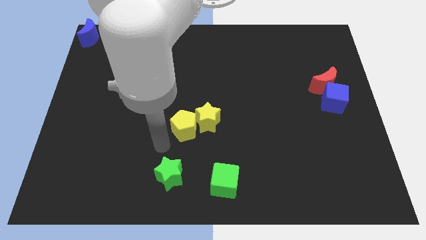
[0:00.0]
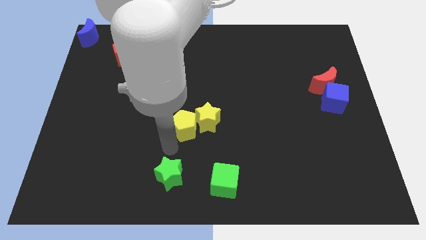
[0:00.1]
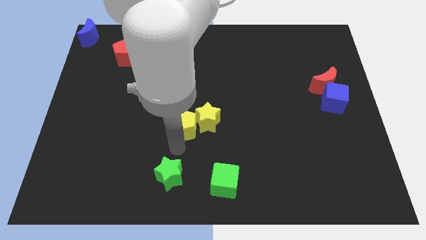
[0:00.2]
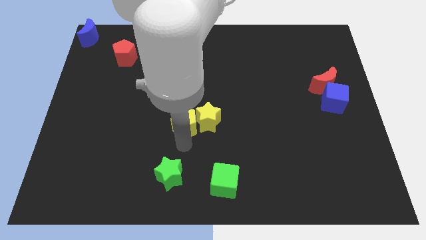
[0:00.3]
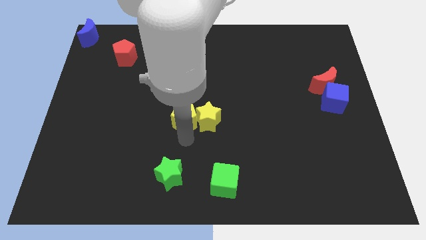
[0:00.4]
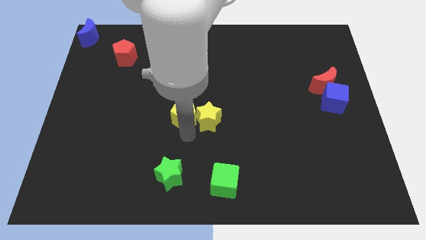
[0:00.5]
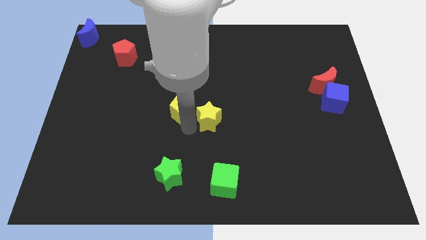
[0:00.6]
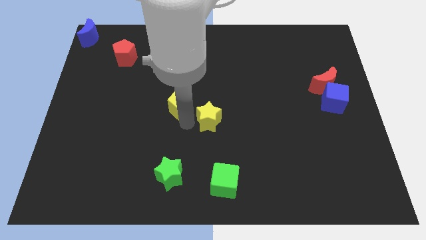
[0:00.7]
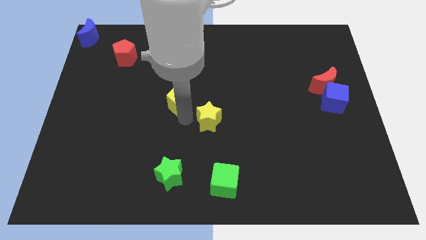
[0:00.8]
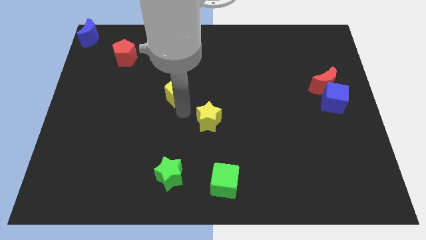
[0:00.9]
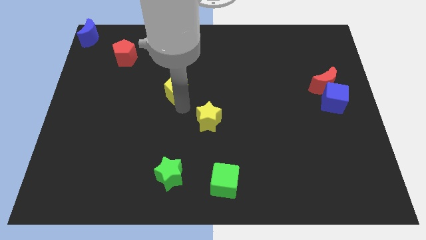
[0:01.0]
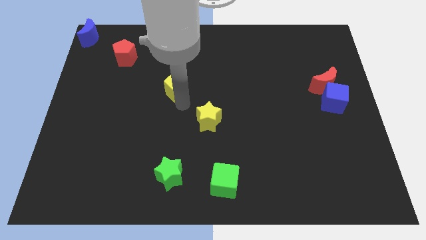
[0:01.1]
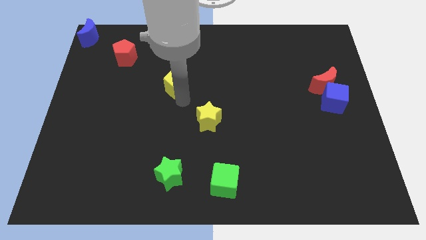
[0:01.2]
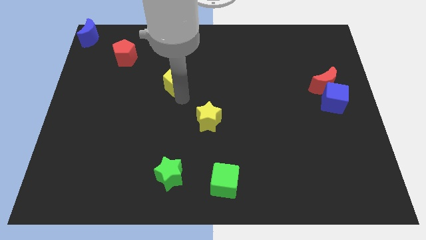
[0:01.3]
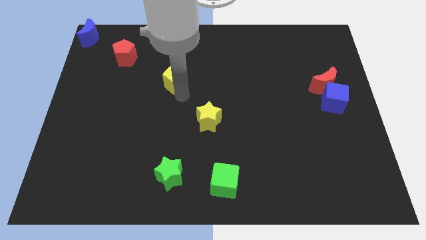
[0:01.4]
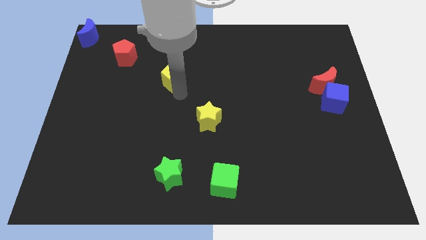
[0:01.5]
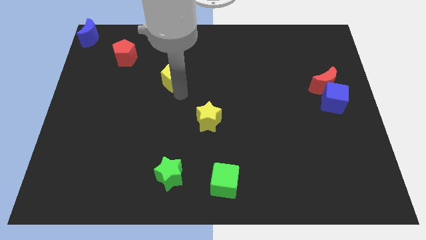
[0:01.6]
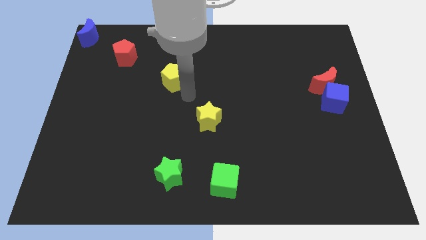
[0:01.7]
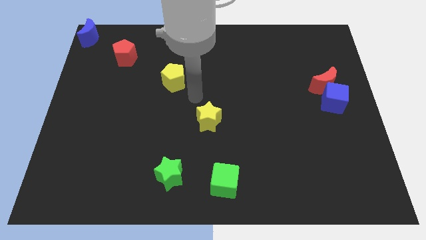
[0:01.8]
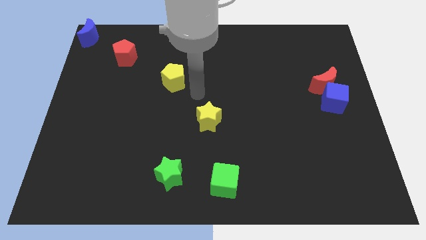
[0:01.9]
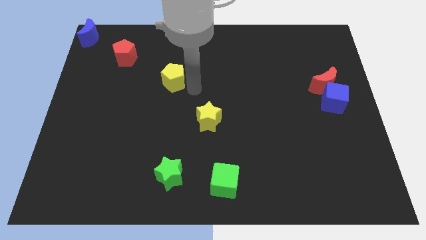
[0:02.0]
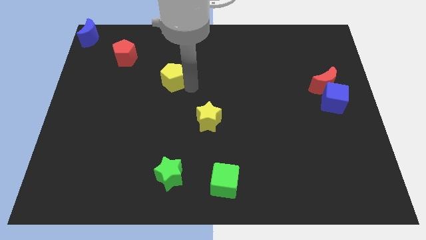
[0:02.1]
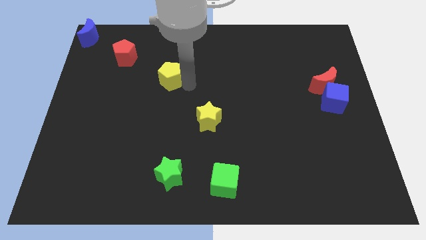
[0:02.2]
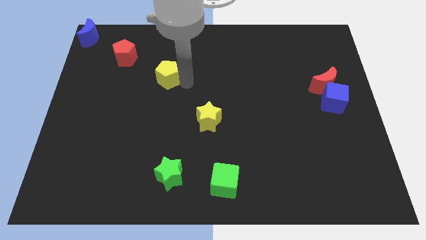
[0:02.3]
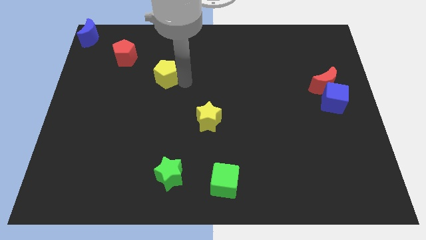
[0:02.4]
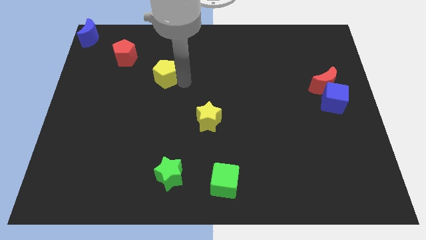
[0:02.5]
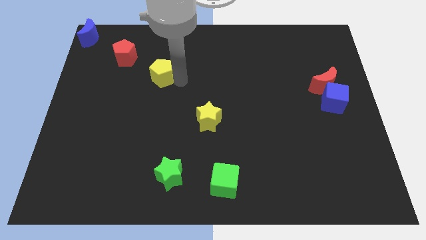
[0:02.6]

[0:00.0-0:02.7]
push the yellow pentagon parallel to the red pentagon

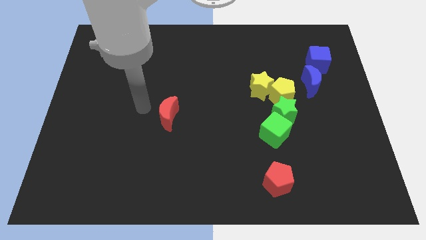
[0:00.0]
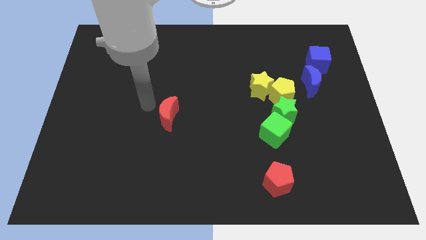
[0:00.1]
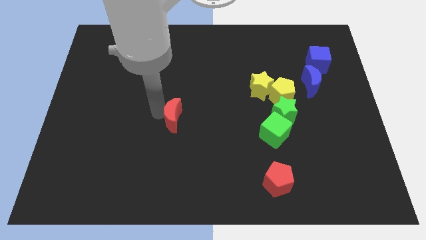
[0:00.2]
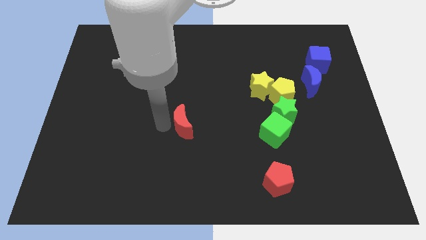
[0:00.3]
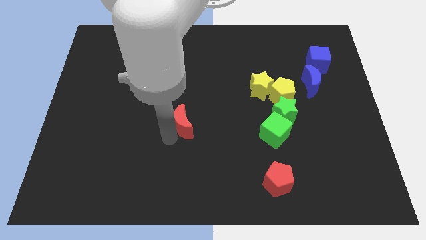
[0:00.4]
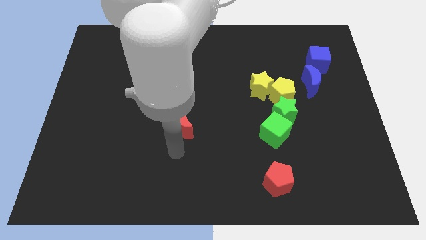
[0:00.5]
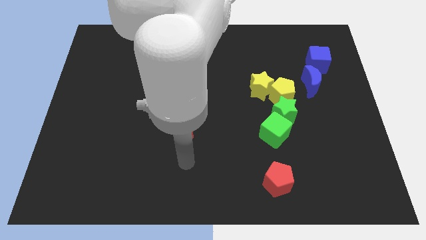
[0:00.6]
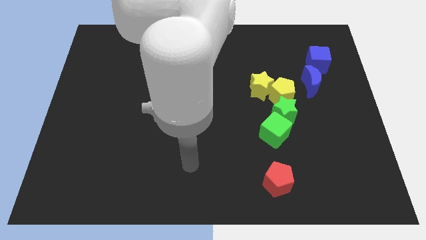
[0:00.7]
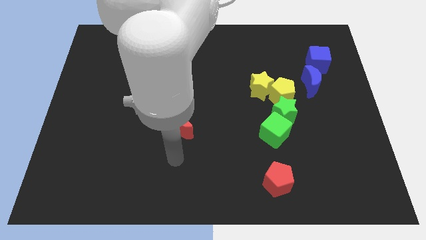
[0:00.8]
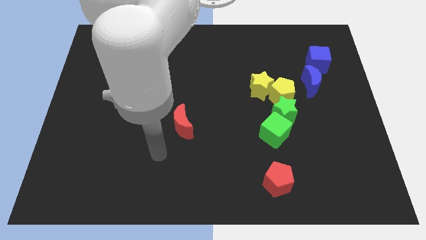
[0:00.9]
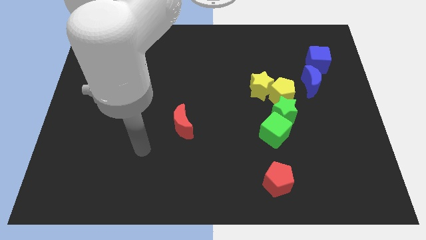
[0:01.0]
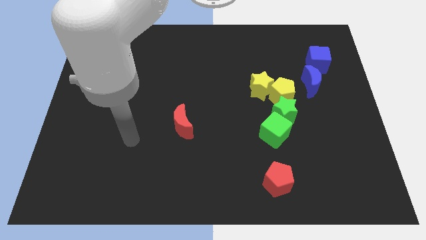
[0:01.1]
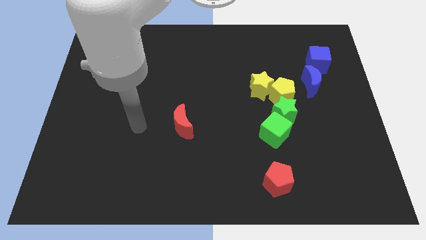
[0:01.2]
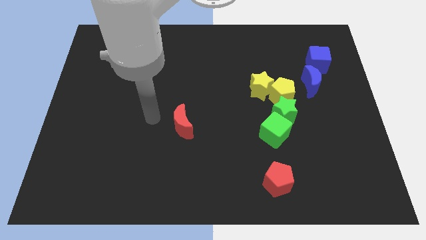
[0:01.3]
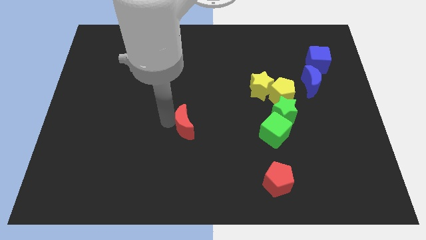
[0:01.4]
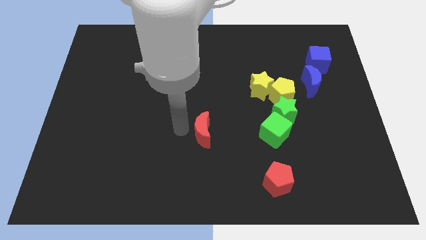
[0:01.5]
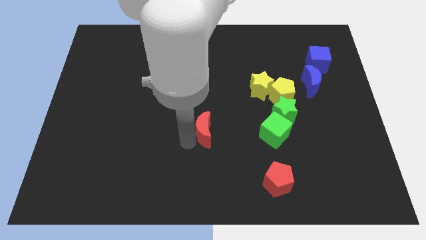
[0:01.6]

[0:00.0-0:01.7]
move the red crescent to the left side of the green cube

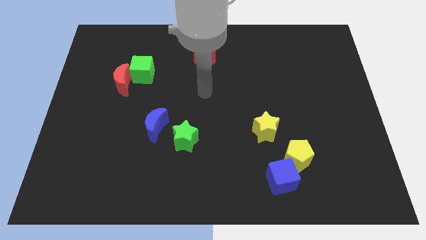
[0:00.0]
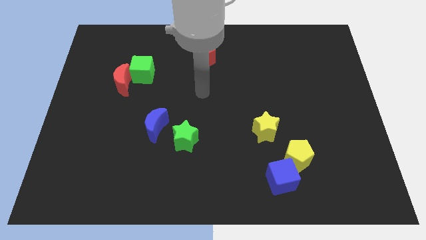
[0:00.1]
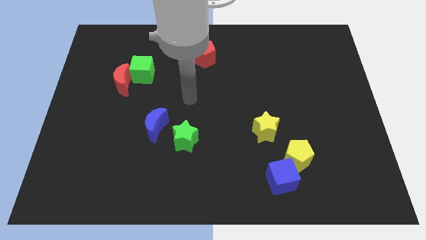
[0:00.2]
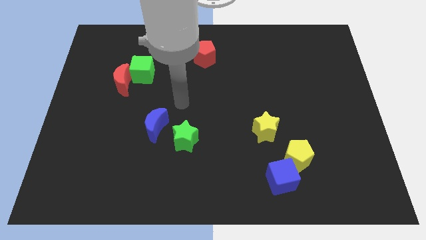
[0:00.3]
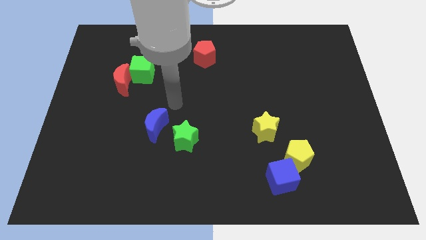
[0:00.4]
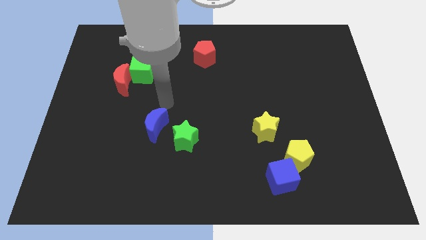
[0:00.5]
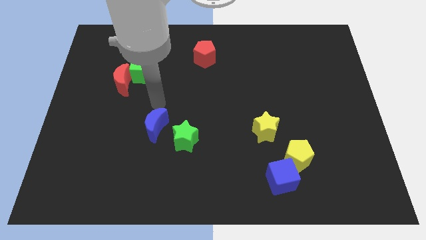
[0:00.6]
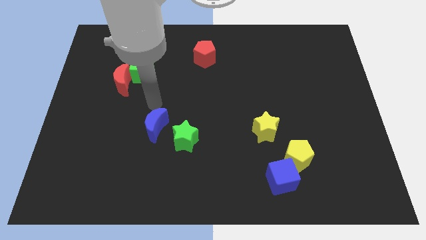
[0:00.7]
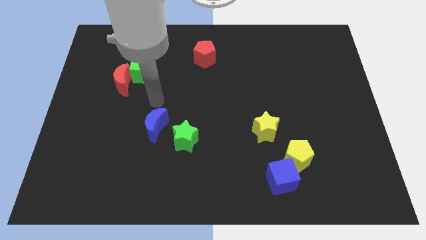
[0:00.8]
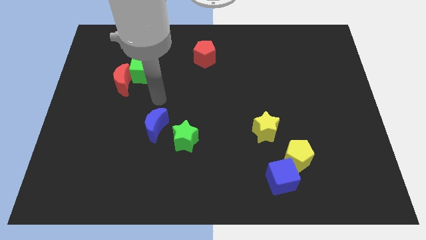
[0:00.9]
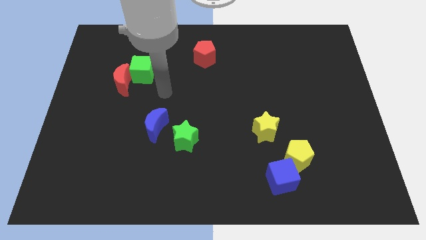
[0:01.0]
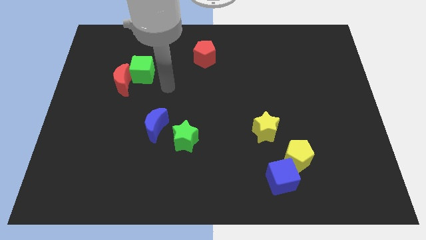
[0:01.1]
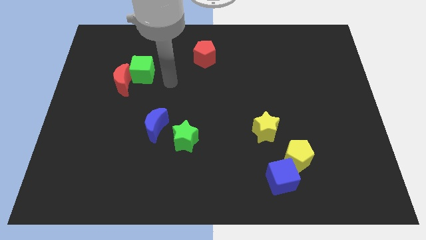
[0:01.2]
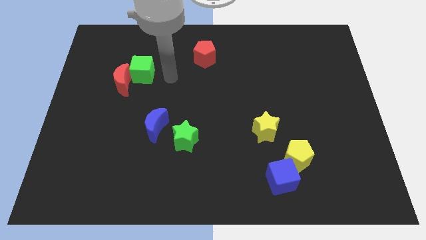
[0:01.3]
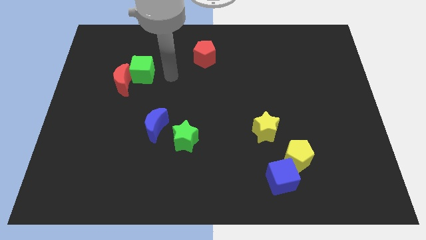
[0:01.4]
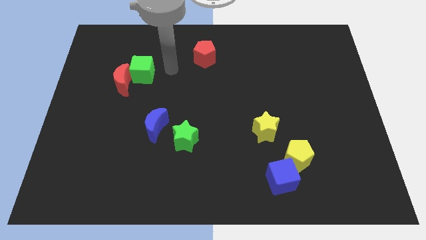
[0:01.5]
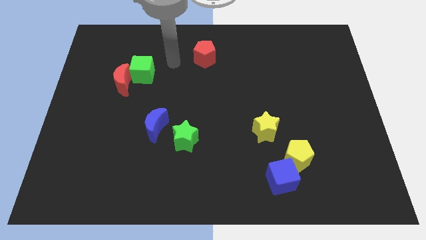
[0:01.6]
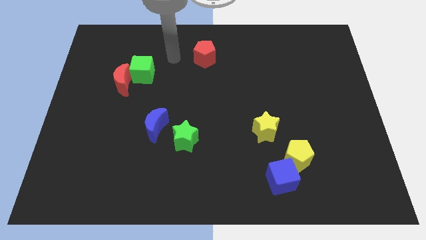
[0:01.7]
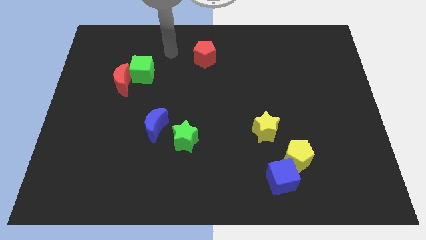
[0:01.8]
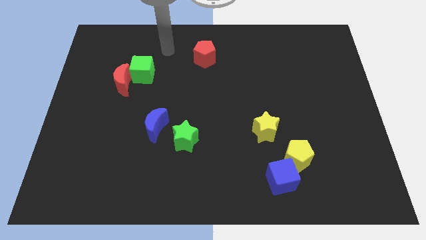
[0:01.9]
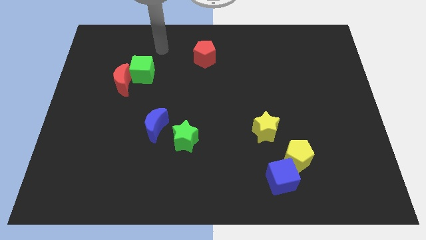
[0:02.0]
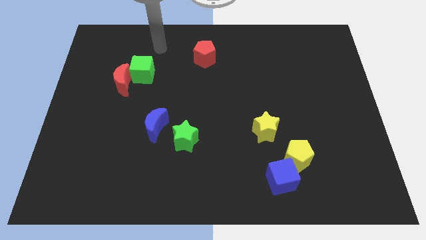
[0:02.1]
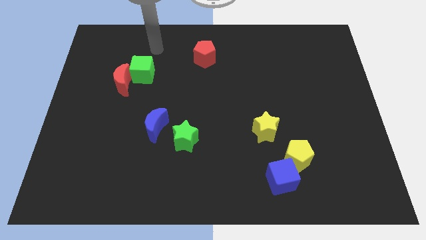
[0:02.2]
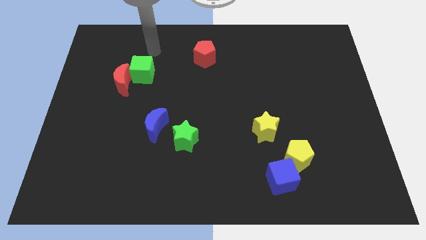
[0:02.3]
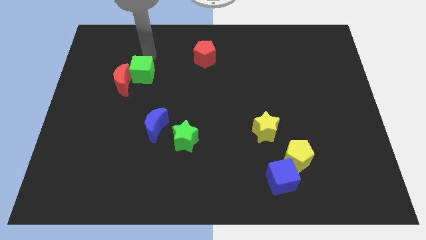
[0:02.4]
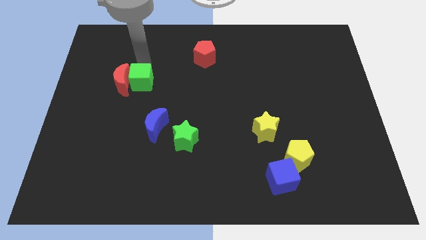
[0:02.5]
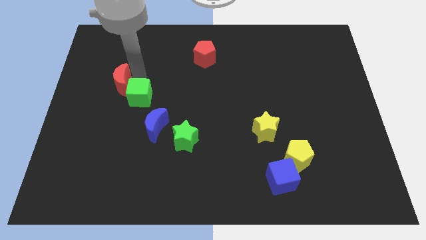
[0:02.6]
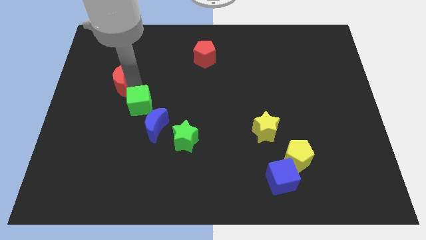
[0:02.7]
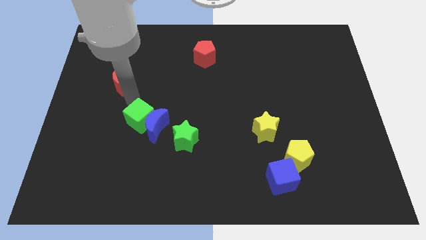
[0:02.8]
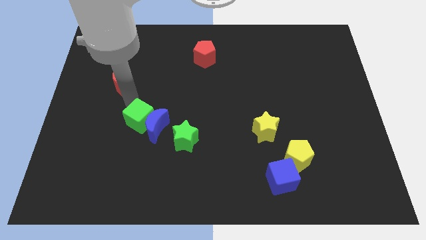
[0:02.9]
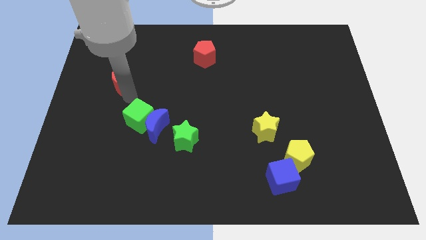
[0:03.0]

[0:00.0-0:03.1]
move the green cube close to the left side of the blue crescent

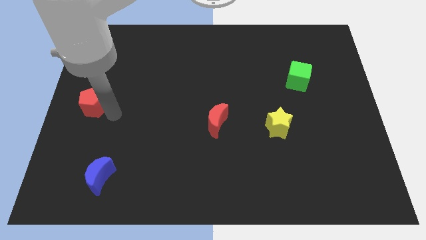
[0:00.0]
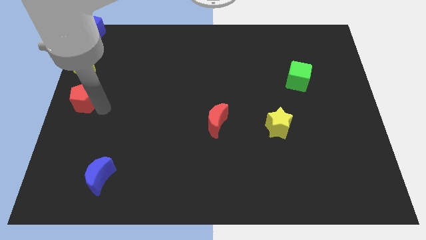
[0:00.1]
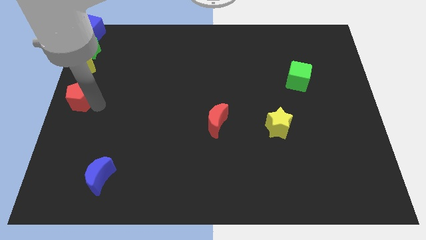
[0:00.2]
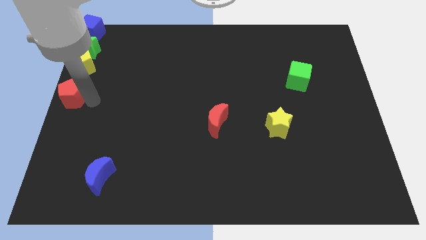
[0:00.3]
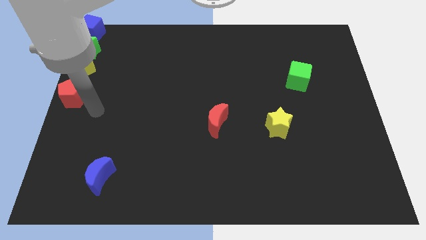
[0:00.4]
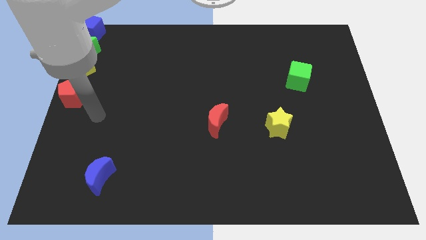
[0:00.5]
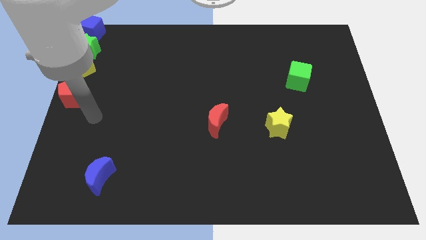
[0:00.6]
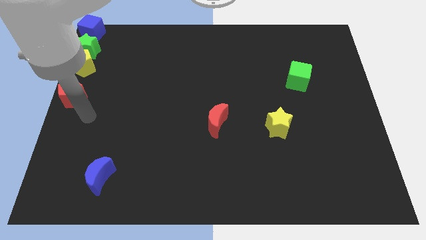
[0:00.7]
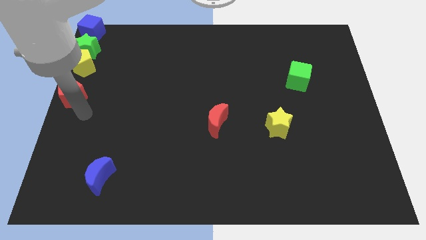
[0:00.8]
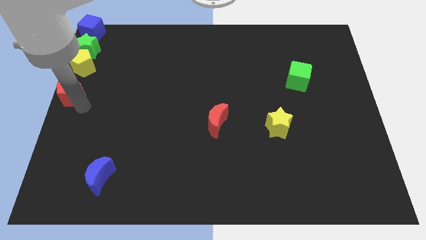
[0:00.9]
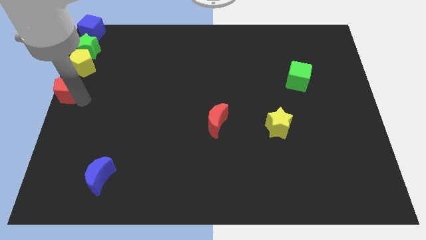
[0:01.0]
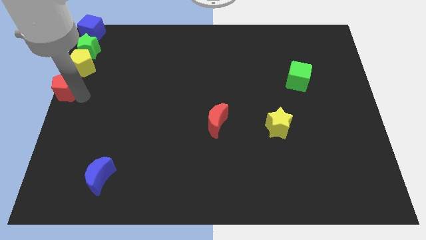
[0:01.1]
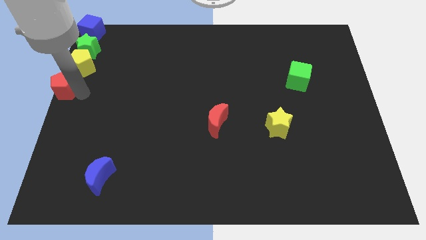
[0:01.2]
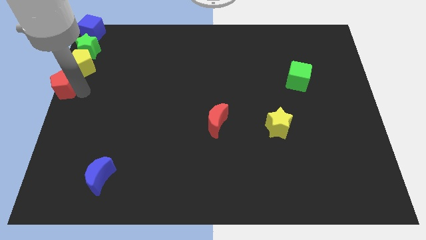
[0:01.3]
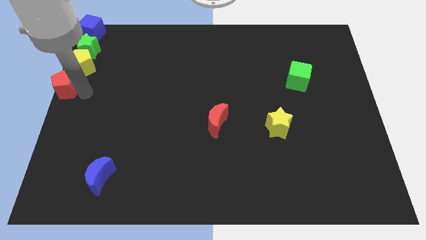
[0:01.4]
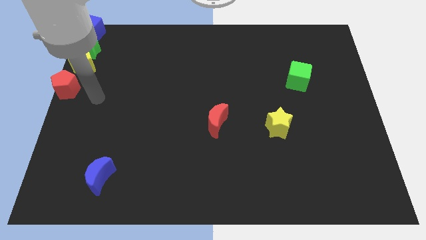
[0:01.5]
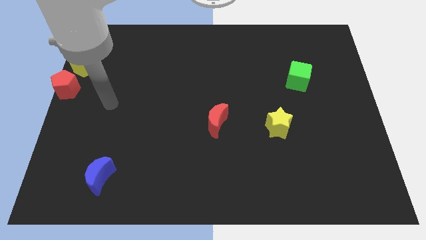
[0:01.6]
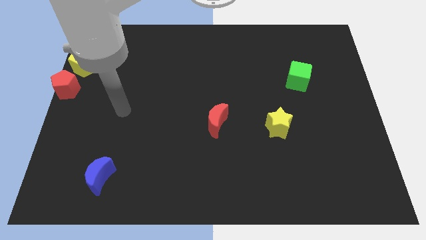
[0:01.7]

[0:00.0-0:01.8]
place the red pentagon under the yellow block
